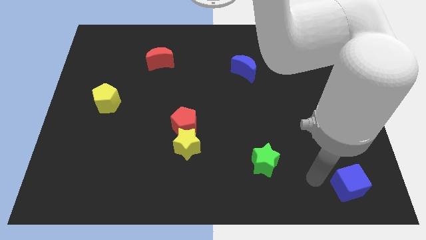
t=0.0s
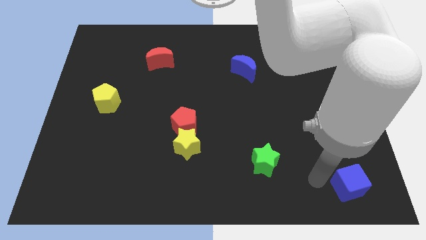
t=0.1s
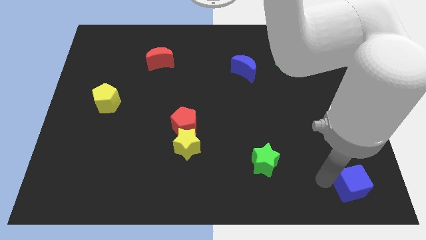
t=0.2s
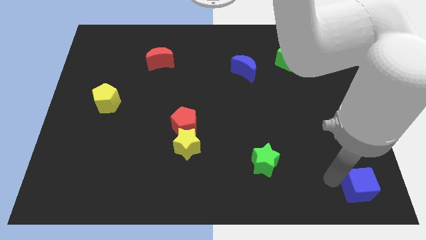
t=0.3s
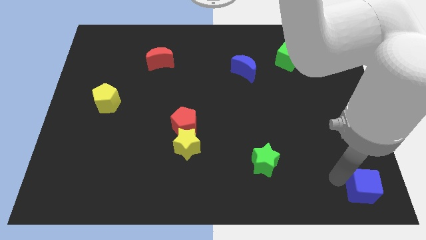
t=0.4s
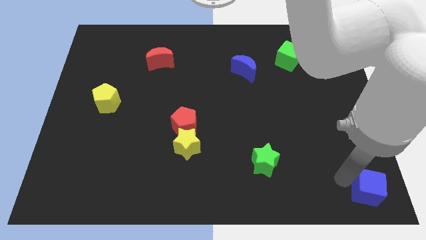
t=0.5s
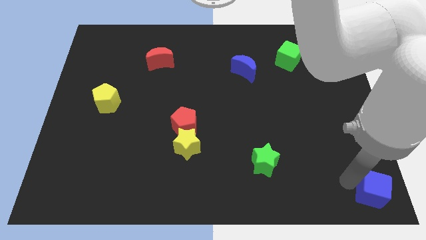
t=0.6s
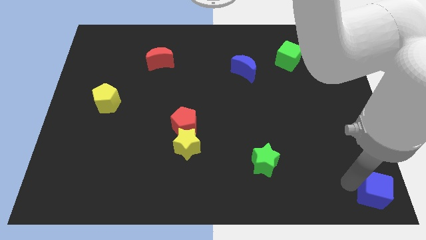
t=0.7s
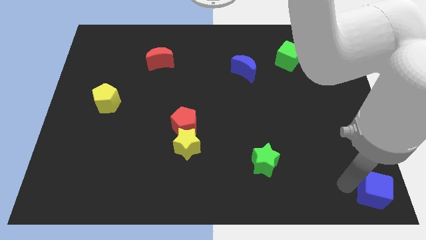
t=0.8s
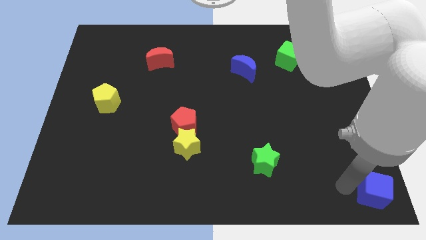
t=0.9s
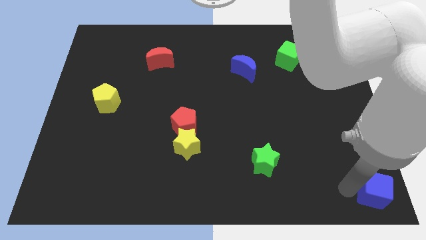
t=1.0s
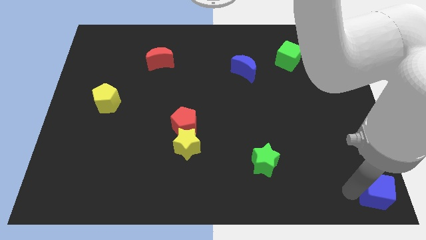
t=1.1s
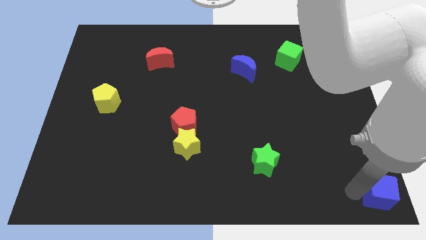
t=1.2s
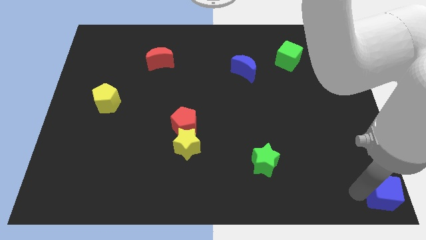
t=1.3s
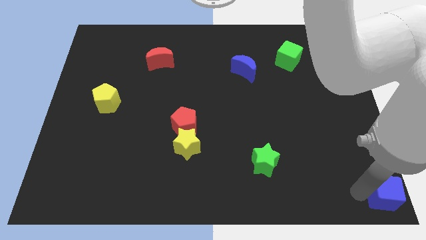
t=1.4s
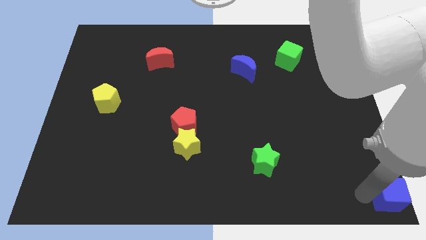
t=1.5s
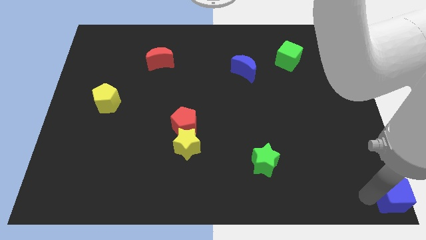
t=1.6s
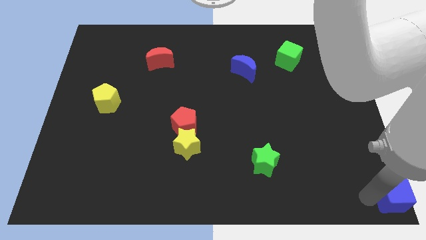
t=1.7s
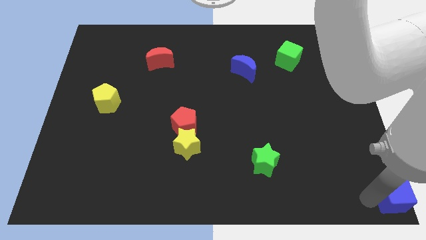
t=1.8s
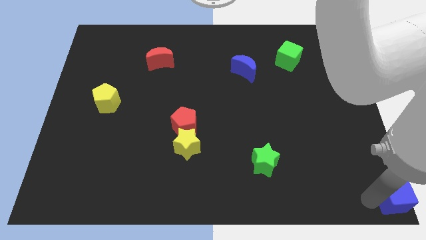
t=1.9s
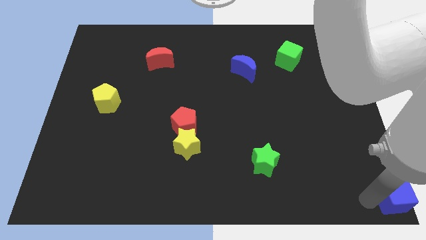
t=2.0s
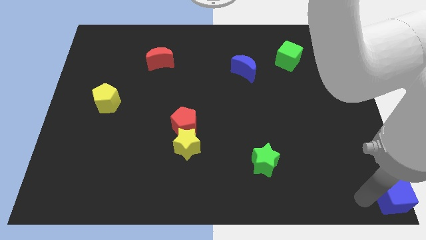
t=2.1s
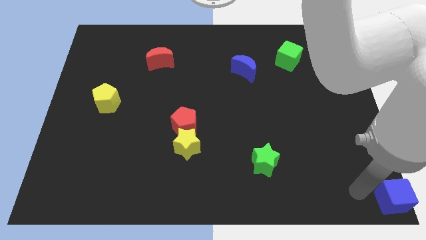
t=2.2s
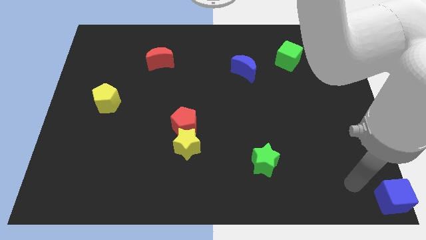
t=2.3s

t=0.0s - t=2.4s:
place the blue cube at bottom right side of the board

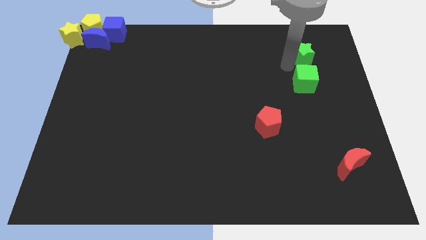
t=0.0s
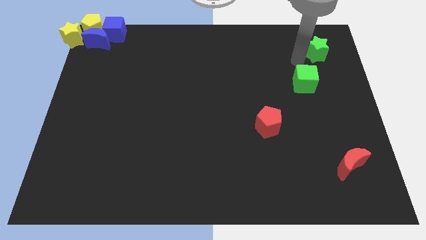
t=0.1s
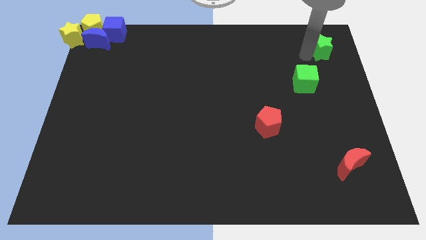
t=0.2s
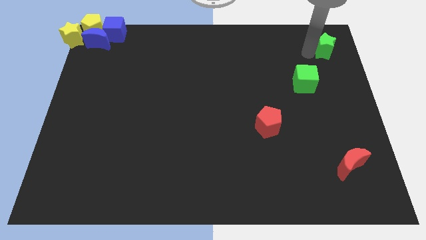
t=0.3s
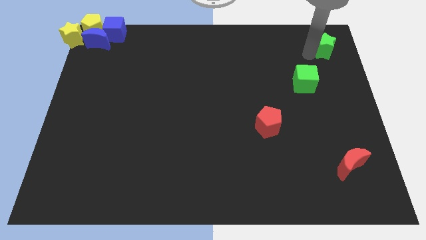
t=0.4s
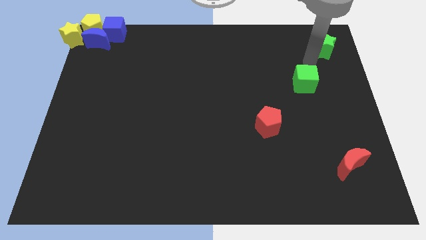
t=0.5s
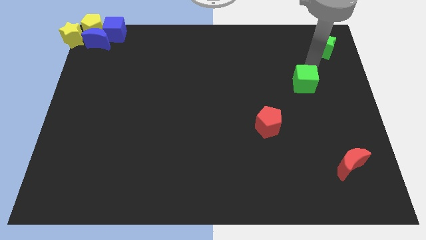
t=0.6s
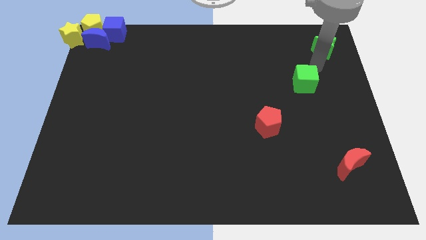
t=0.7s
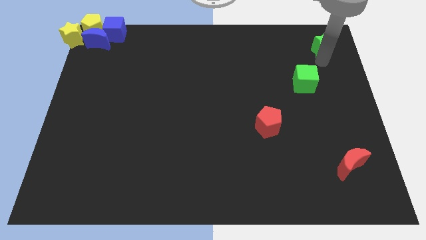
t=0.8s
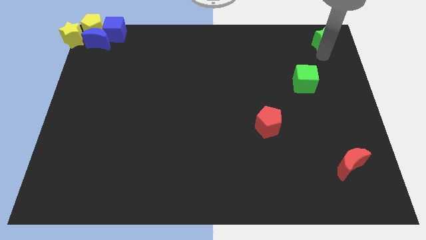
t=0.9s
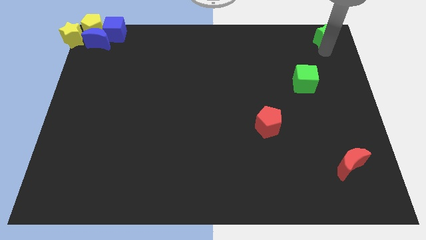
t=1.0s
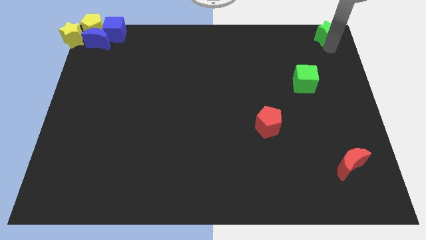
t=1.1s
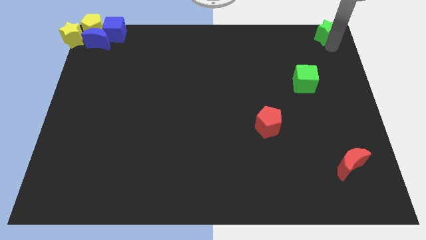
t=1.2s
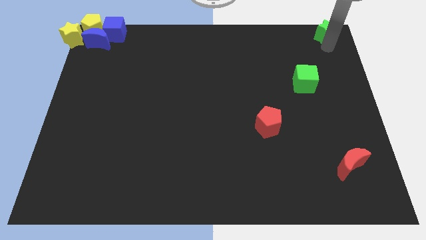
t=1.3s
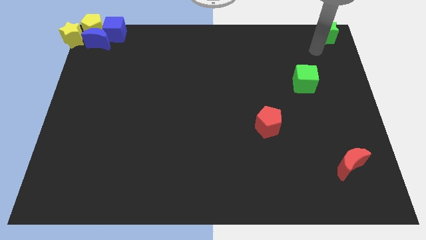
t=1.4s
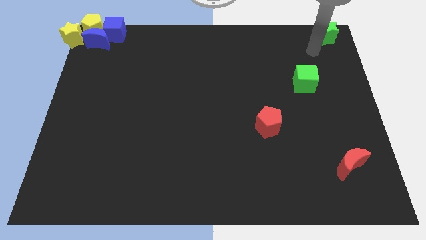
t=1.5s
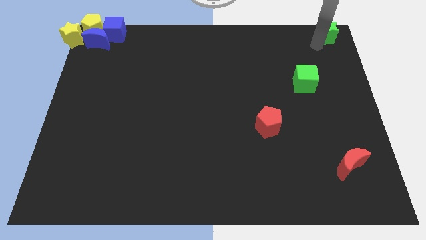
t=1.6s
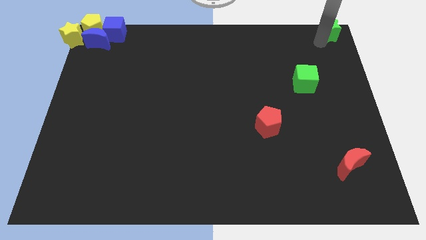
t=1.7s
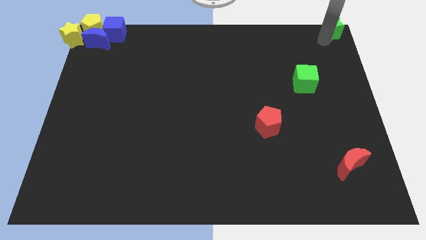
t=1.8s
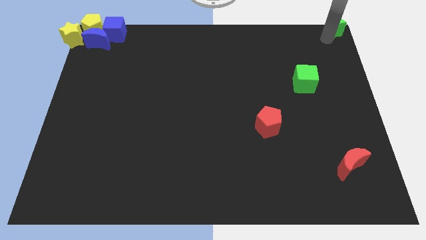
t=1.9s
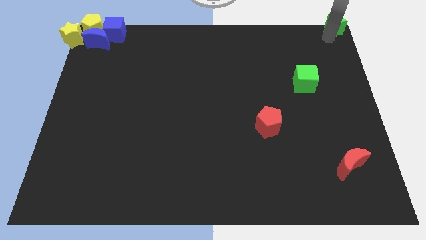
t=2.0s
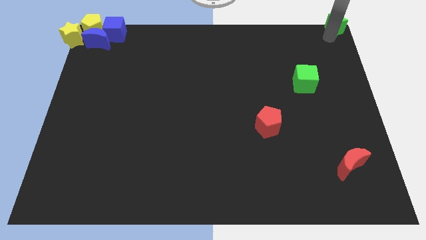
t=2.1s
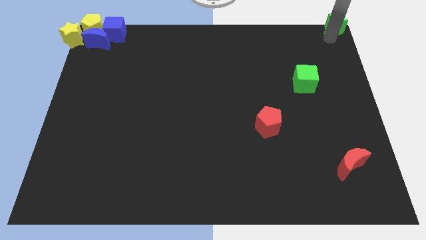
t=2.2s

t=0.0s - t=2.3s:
move the green star to the top right corner of the board

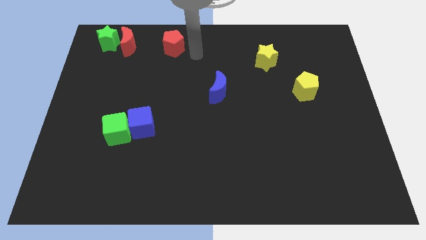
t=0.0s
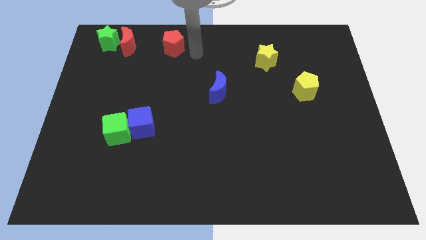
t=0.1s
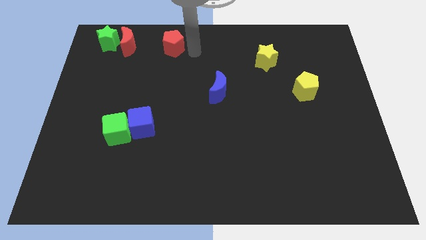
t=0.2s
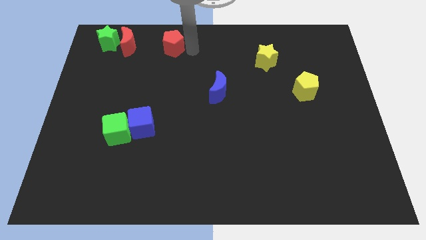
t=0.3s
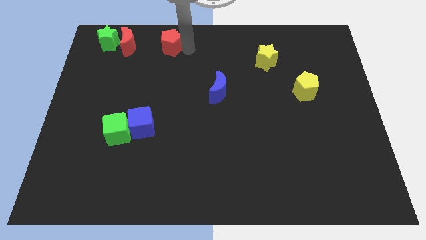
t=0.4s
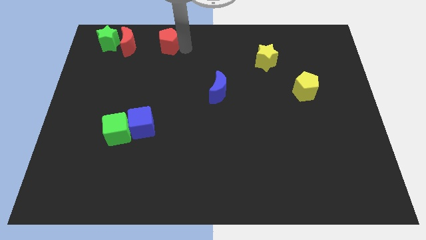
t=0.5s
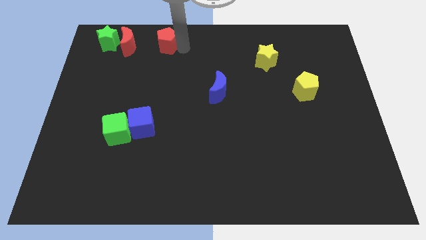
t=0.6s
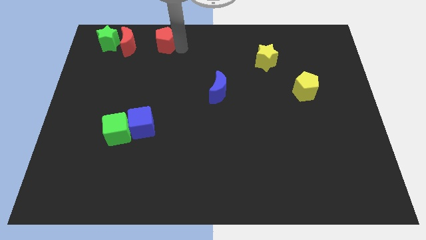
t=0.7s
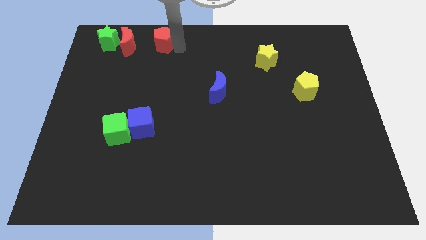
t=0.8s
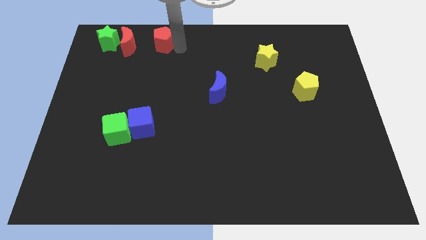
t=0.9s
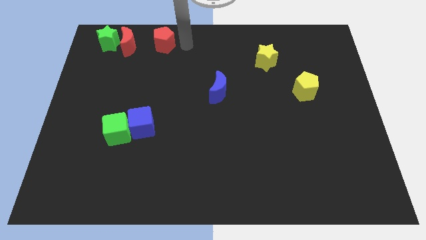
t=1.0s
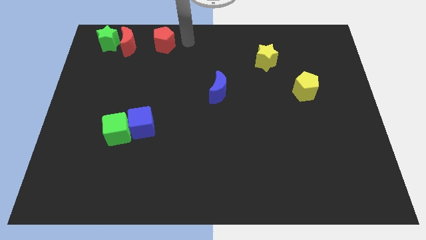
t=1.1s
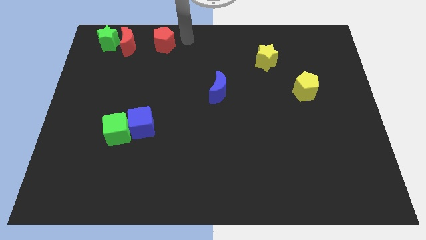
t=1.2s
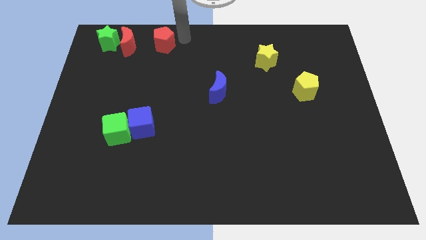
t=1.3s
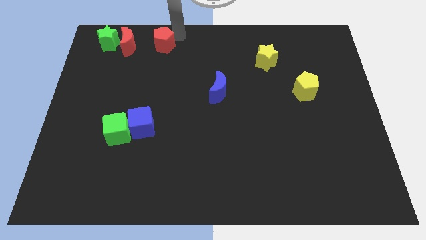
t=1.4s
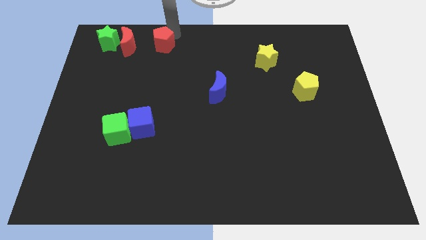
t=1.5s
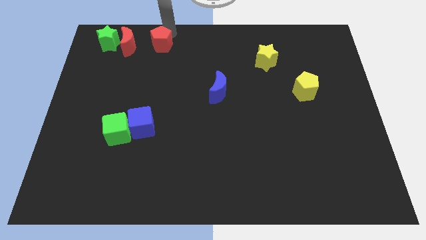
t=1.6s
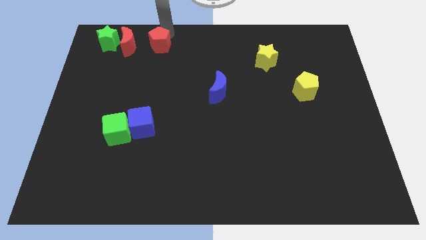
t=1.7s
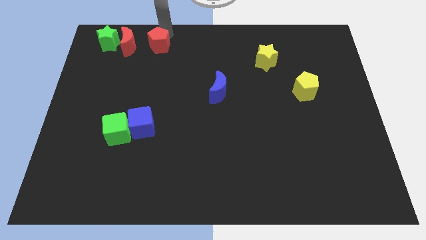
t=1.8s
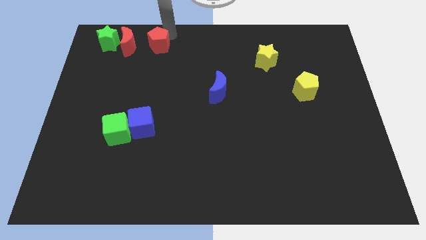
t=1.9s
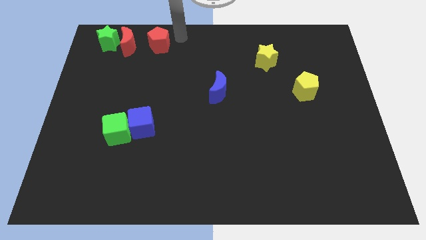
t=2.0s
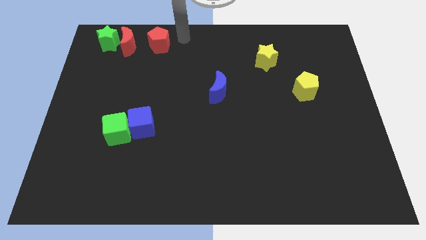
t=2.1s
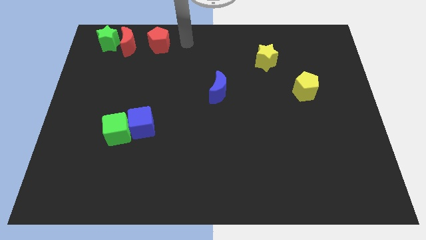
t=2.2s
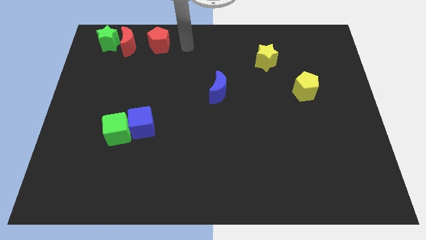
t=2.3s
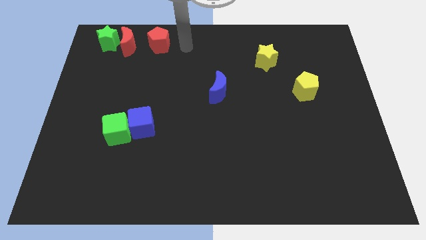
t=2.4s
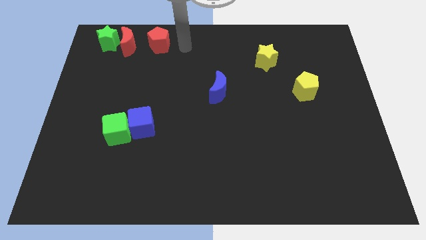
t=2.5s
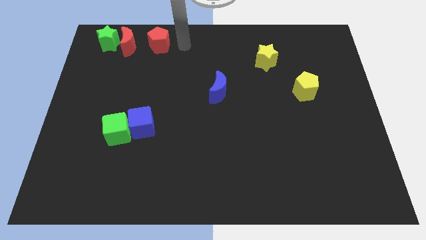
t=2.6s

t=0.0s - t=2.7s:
slide the red pentagon towards the red crescent

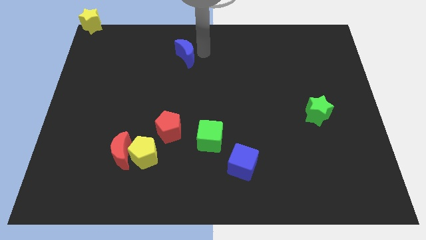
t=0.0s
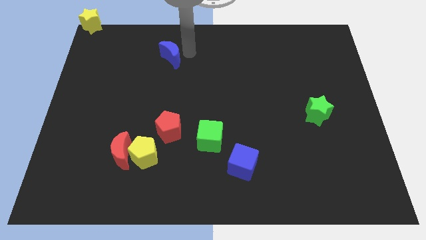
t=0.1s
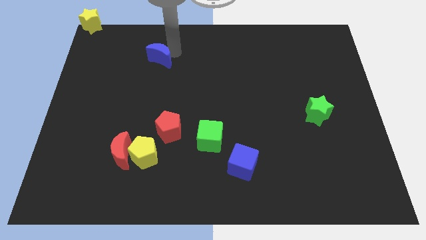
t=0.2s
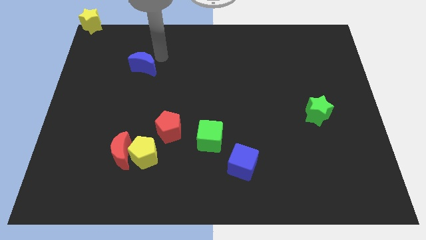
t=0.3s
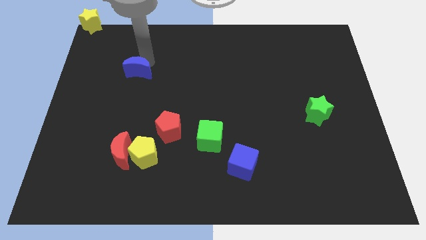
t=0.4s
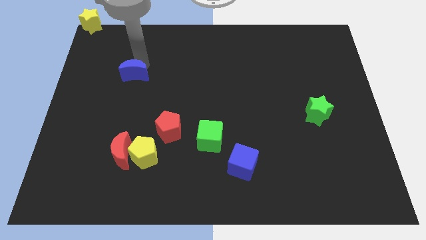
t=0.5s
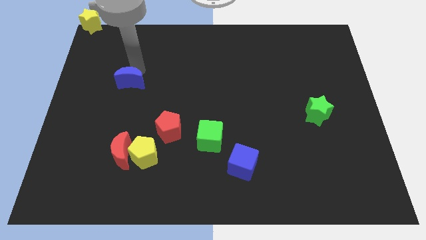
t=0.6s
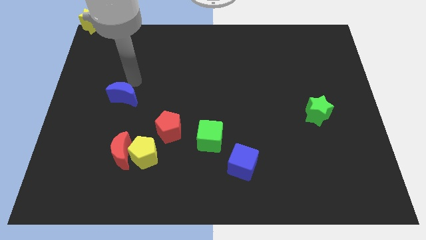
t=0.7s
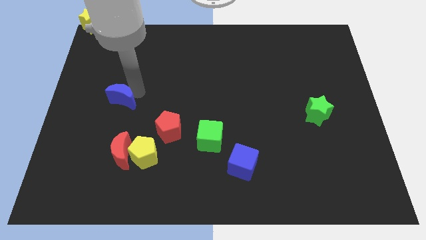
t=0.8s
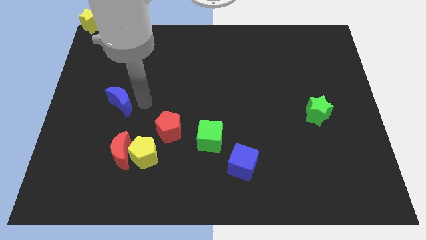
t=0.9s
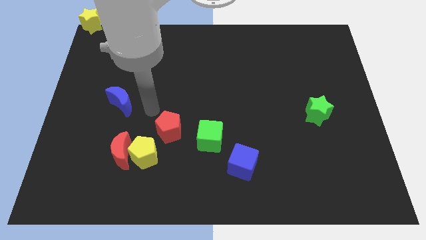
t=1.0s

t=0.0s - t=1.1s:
slide blue moon down on top of red moon

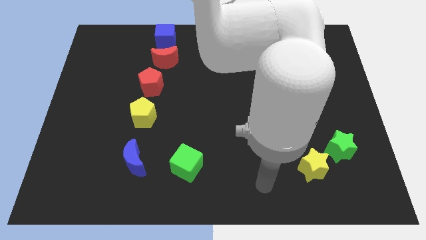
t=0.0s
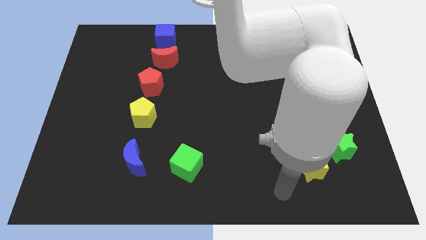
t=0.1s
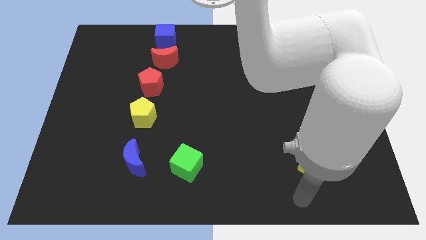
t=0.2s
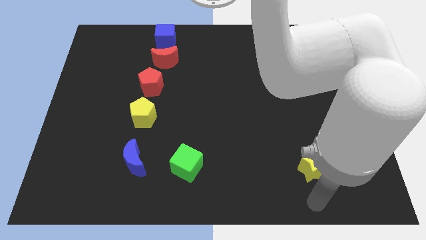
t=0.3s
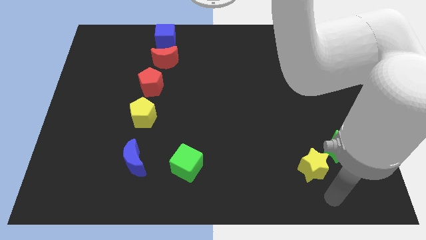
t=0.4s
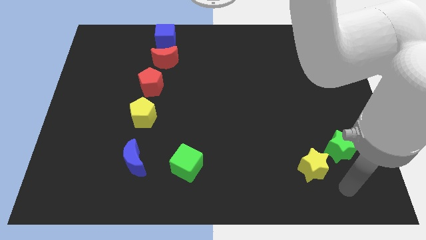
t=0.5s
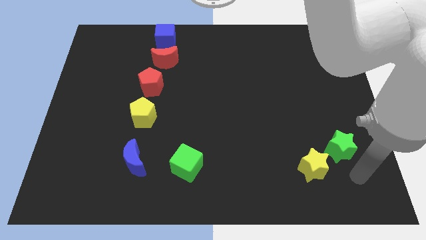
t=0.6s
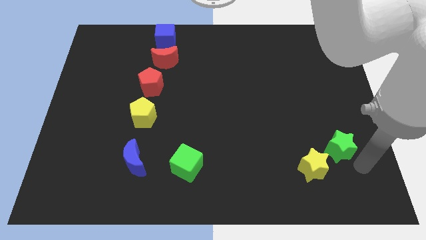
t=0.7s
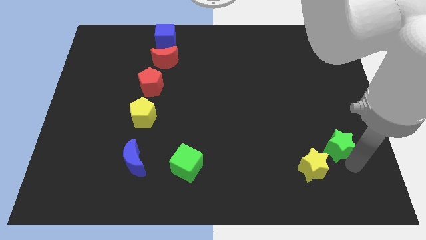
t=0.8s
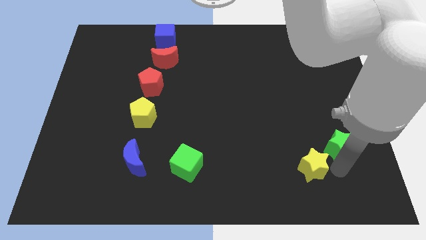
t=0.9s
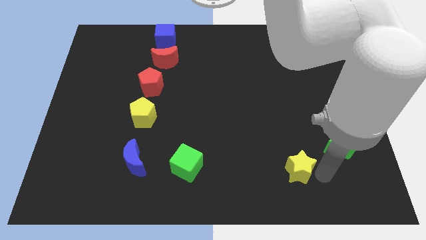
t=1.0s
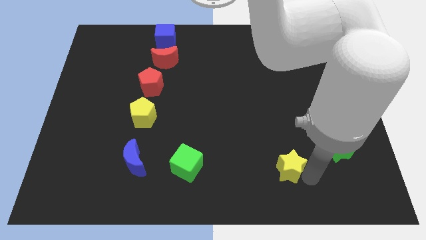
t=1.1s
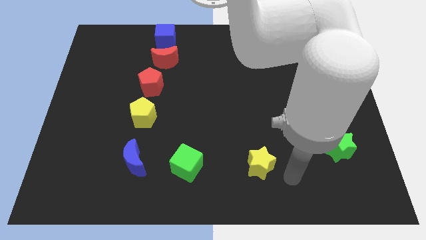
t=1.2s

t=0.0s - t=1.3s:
push the yellow star in between the green blocks
